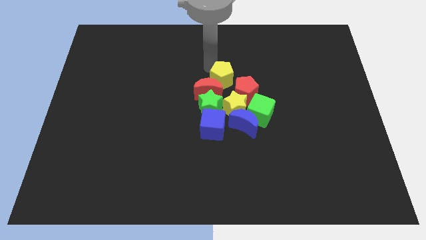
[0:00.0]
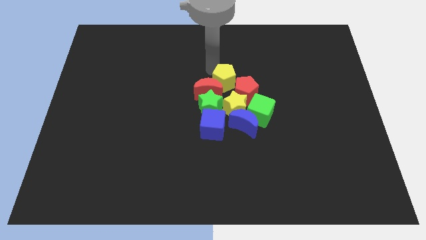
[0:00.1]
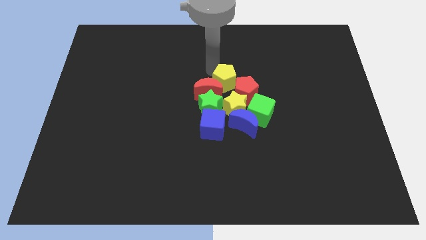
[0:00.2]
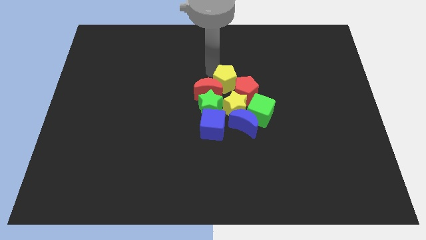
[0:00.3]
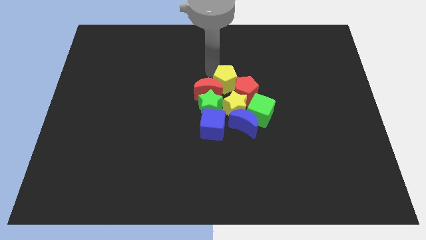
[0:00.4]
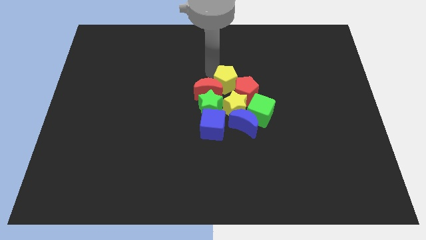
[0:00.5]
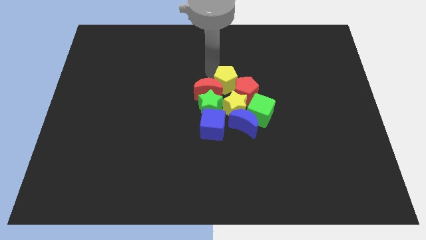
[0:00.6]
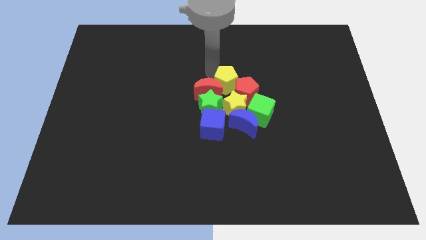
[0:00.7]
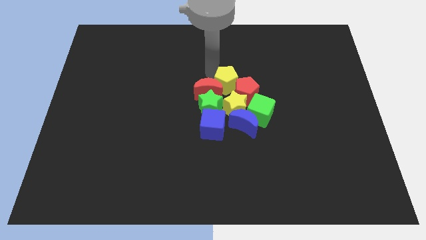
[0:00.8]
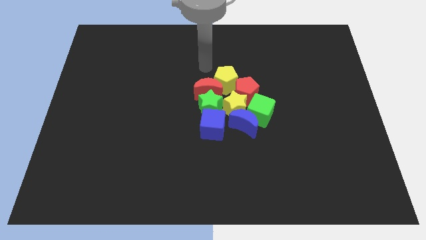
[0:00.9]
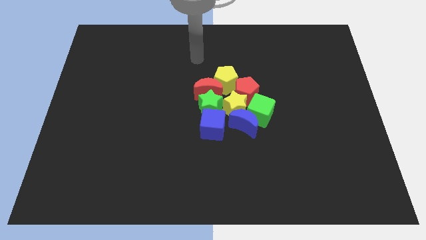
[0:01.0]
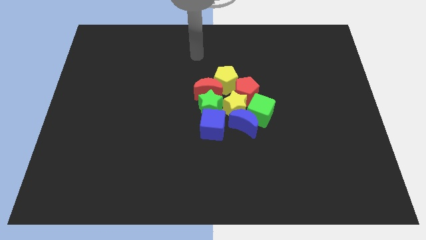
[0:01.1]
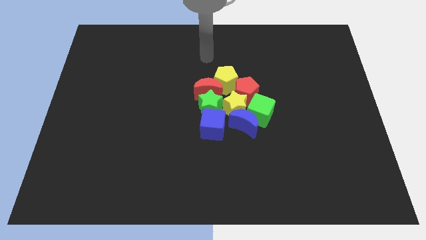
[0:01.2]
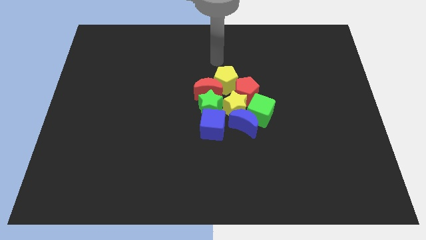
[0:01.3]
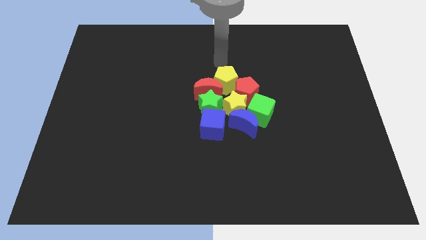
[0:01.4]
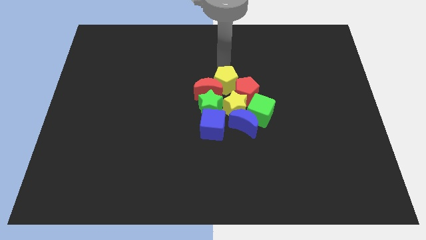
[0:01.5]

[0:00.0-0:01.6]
place the yellow pentagon in between the red moon and red pentagon

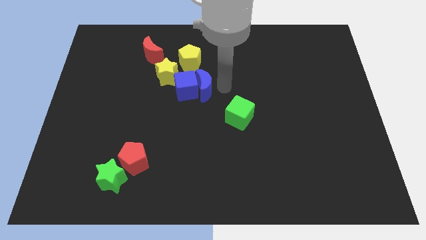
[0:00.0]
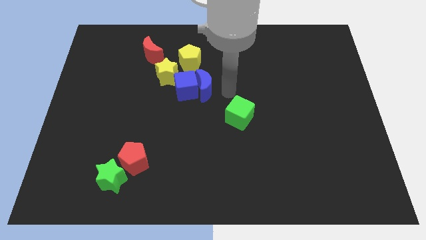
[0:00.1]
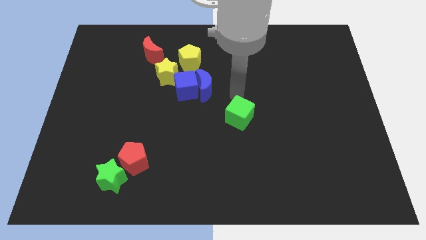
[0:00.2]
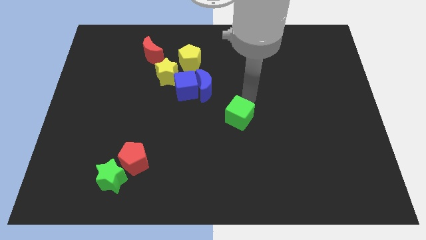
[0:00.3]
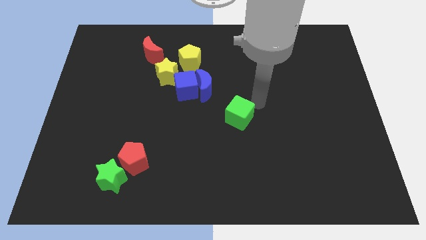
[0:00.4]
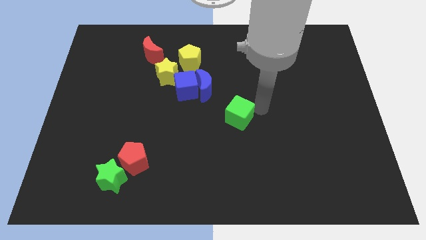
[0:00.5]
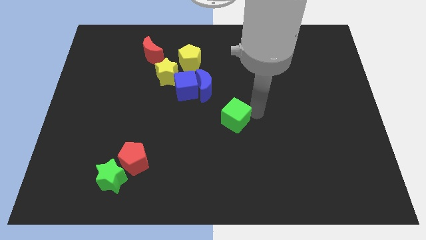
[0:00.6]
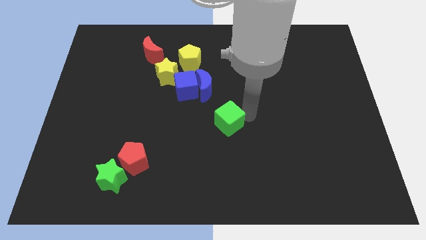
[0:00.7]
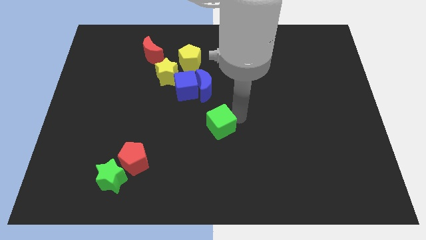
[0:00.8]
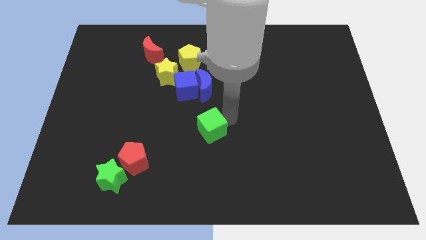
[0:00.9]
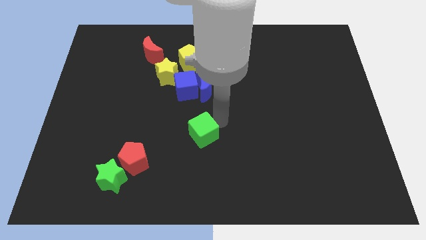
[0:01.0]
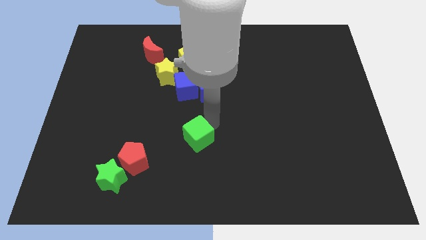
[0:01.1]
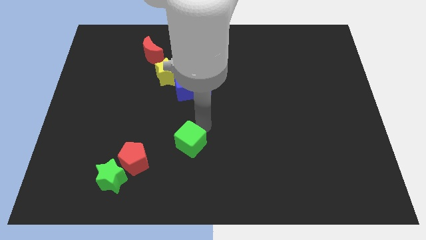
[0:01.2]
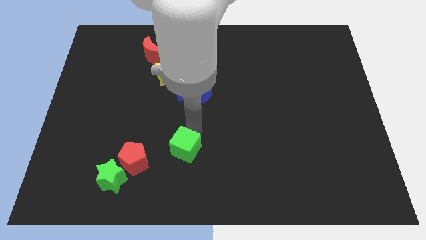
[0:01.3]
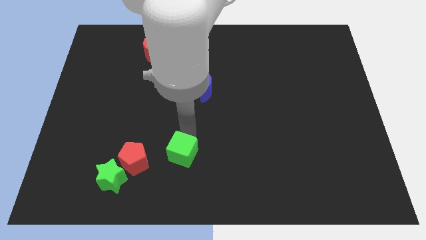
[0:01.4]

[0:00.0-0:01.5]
move green cube to the right of red pentagon

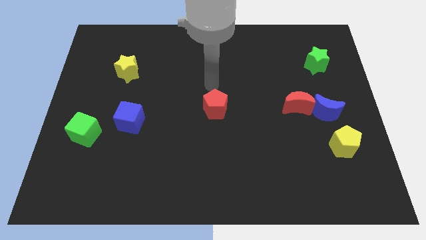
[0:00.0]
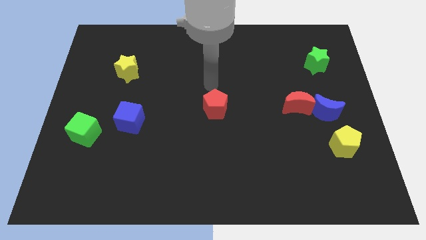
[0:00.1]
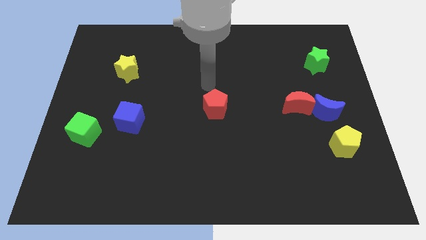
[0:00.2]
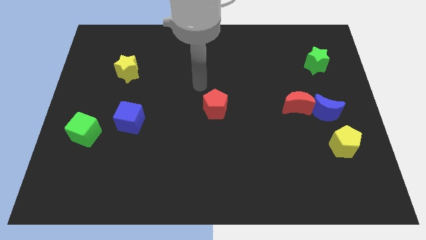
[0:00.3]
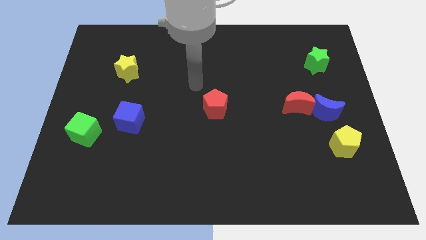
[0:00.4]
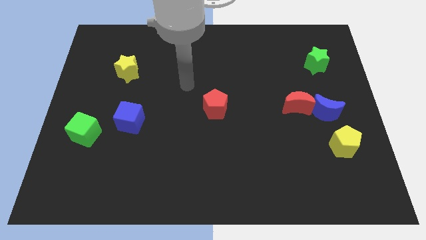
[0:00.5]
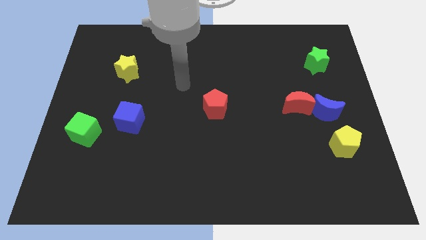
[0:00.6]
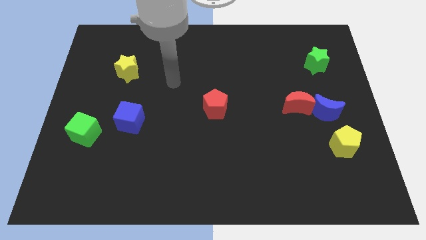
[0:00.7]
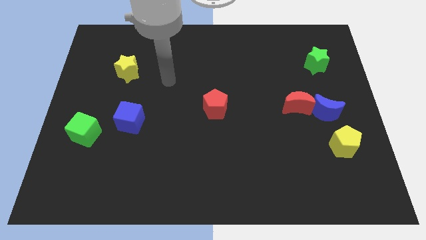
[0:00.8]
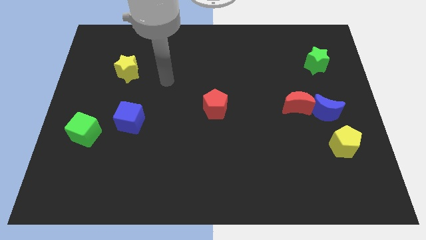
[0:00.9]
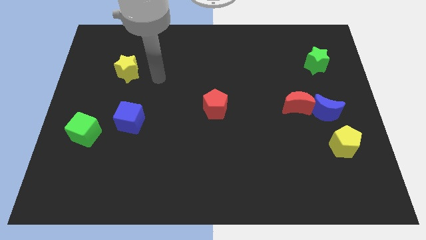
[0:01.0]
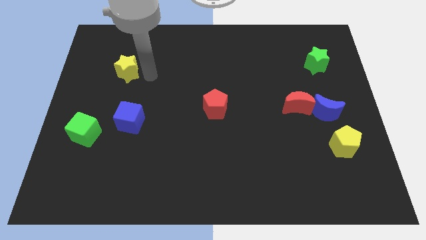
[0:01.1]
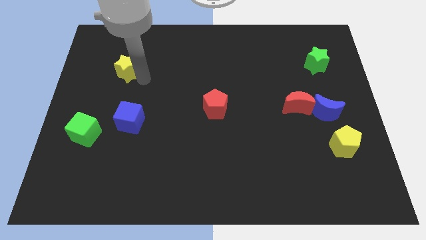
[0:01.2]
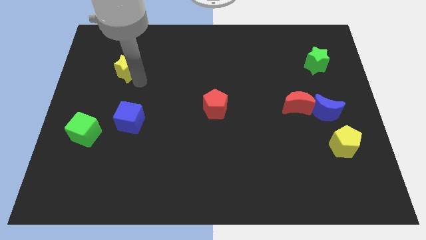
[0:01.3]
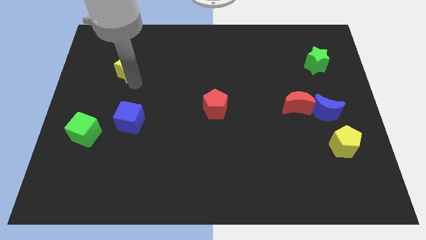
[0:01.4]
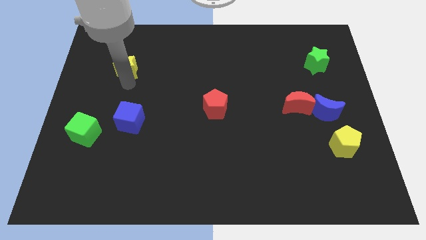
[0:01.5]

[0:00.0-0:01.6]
place your arm at the bottom of the yellow star

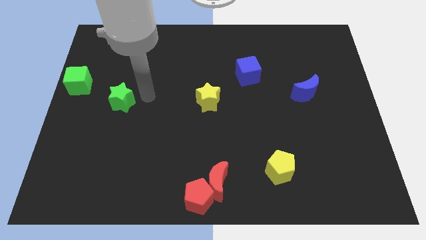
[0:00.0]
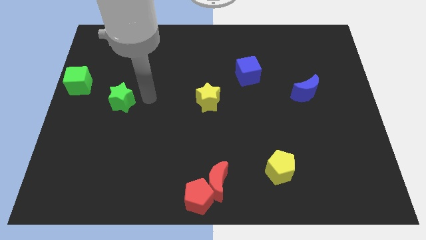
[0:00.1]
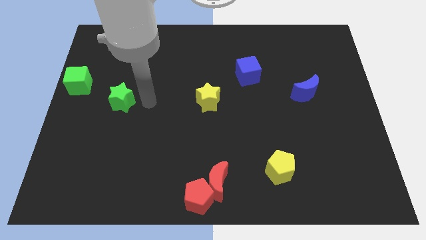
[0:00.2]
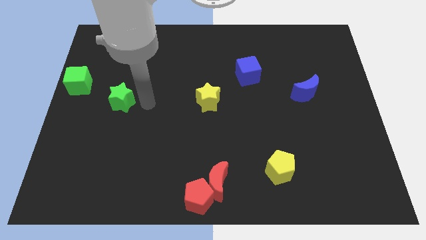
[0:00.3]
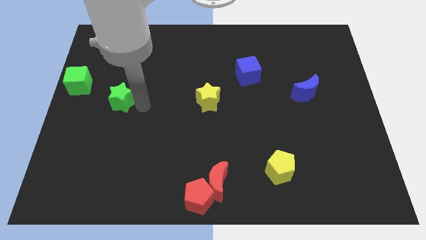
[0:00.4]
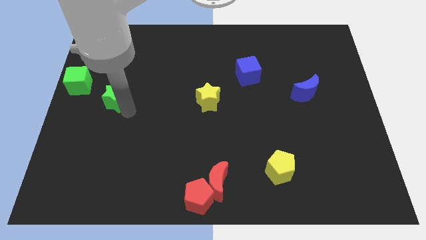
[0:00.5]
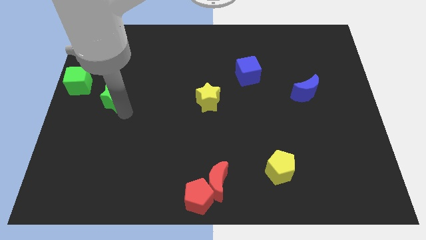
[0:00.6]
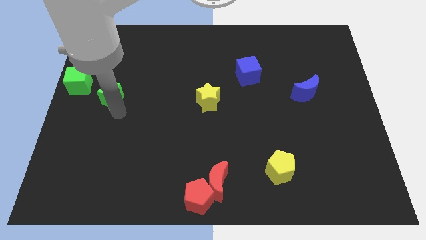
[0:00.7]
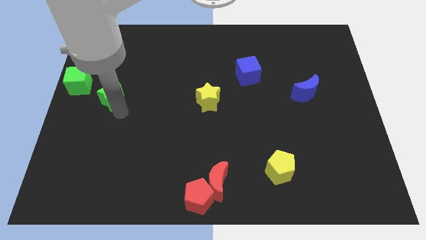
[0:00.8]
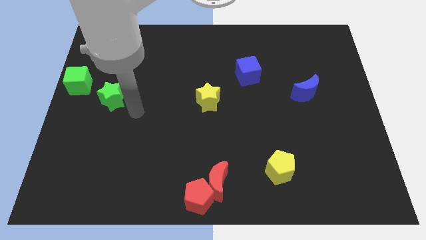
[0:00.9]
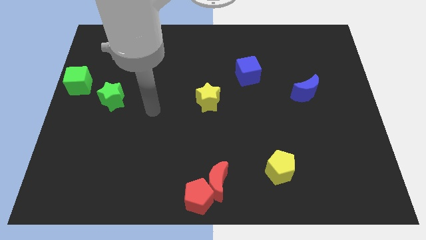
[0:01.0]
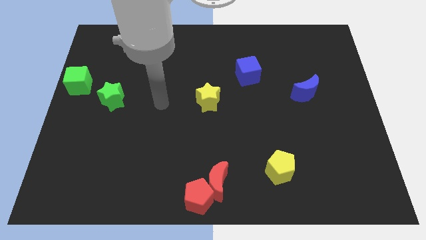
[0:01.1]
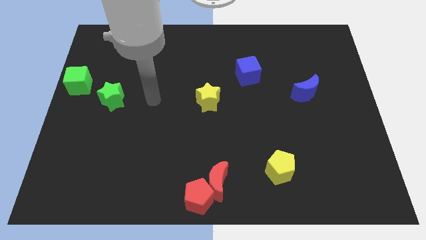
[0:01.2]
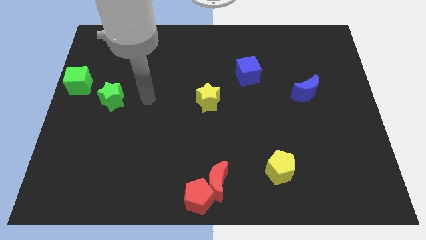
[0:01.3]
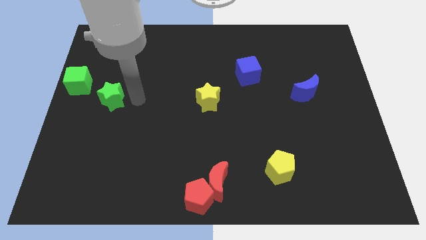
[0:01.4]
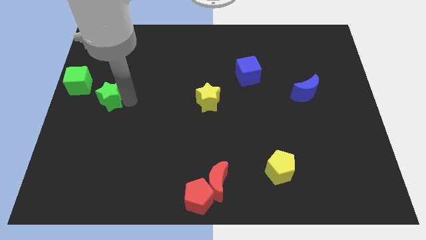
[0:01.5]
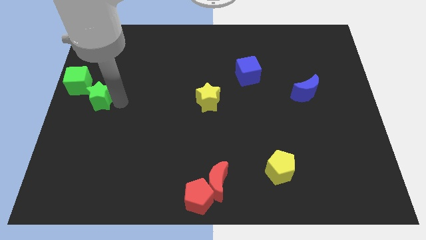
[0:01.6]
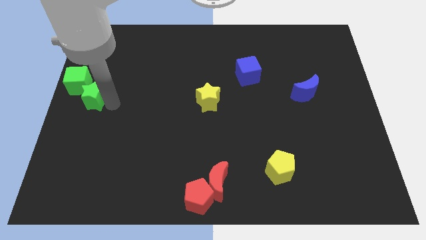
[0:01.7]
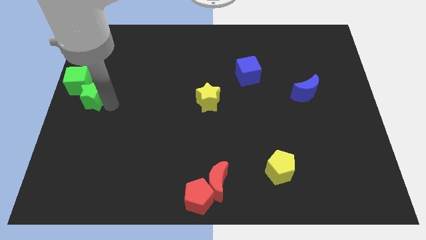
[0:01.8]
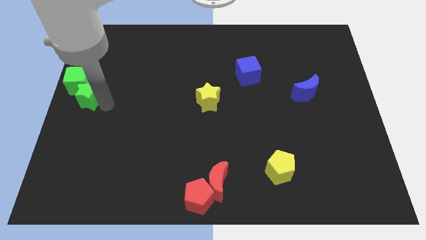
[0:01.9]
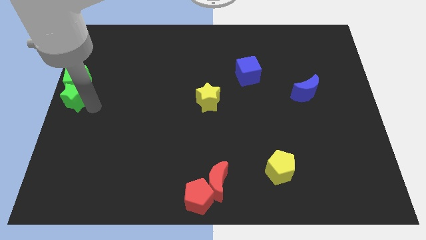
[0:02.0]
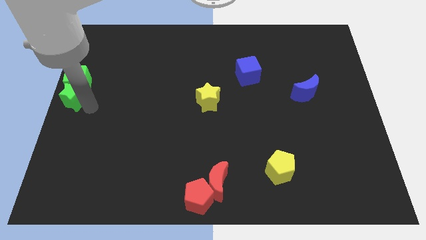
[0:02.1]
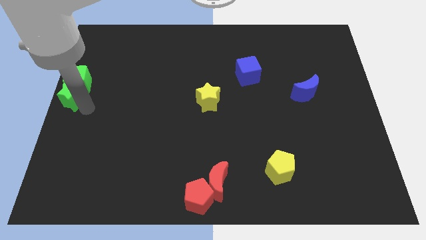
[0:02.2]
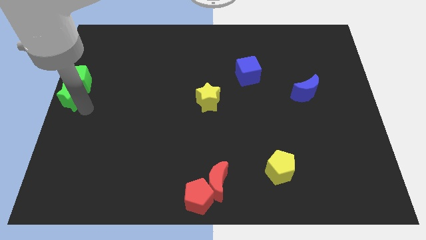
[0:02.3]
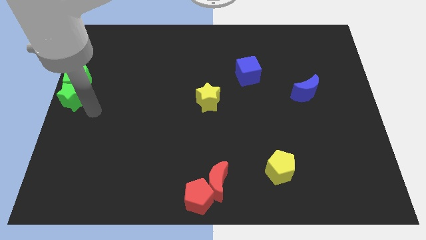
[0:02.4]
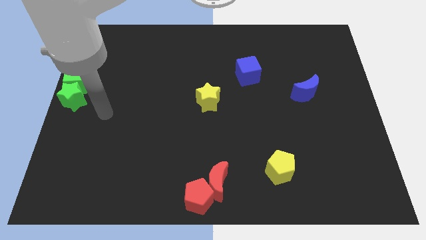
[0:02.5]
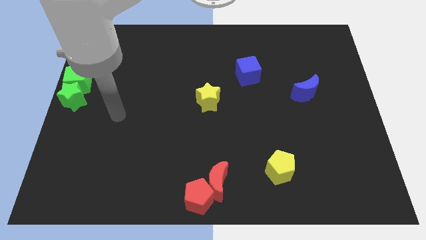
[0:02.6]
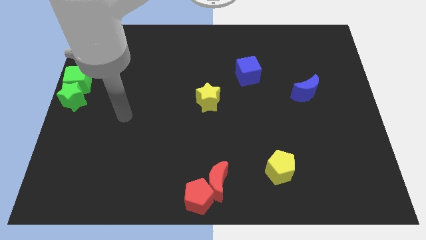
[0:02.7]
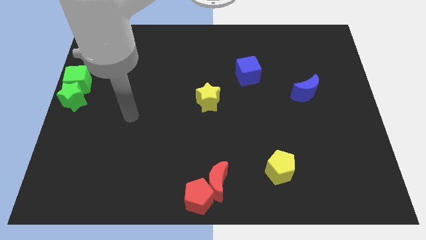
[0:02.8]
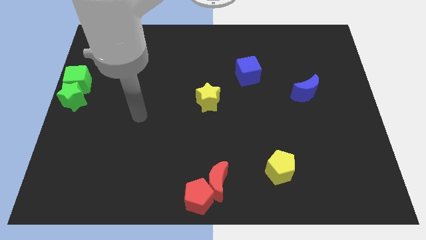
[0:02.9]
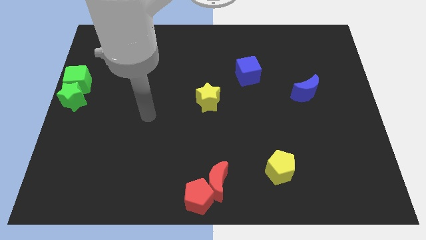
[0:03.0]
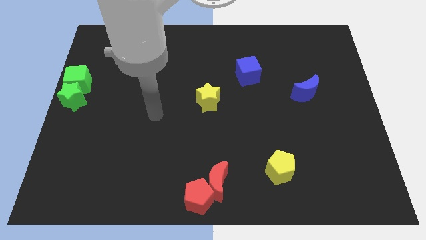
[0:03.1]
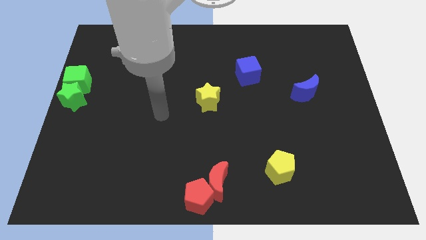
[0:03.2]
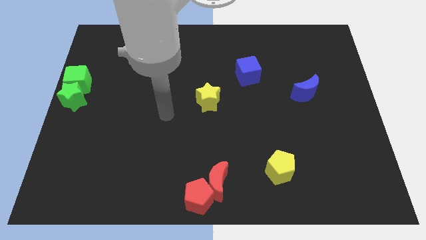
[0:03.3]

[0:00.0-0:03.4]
place the green star vertically below the green cube

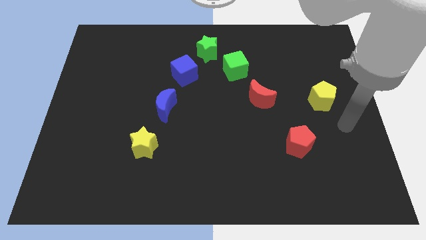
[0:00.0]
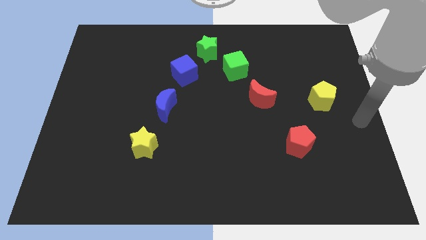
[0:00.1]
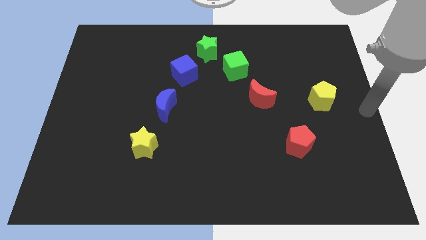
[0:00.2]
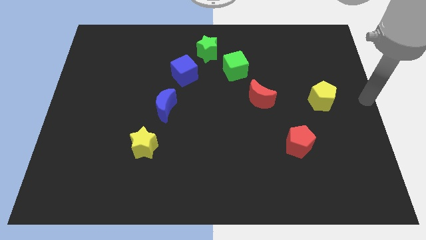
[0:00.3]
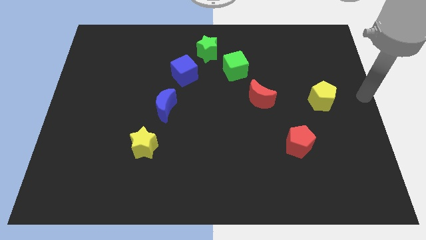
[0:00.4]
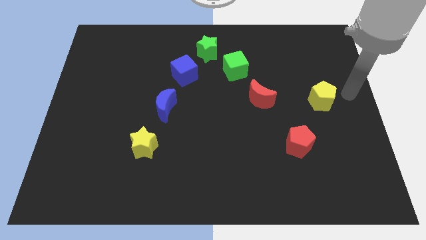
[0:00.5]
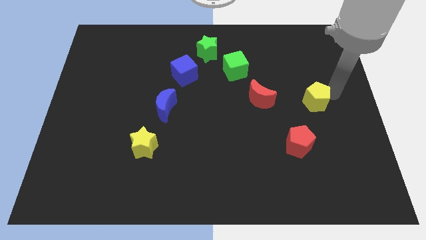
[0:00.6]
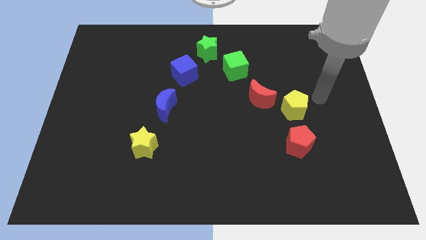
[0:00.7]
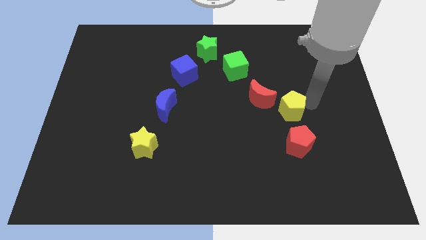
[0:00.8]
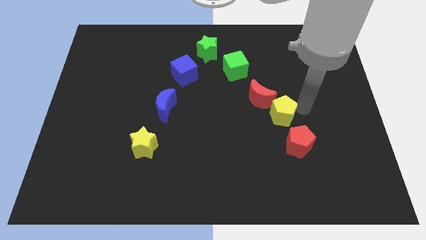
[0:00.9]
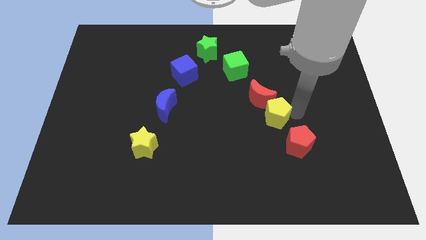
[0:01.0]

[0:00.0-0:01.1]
push the yellow pentagon between the red pentagon and red moon
